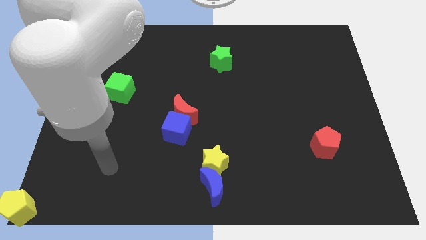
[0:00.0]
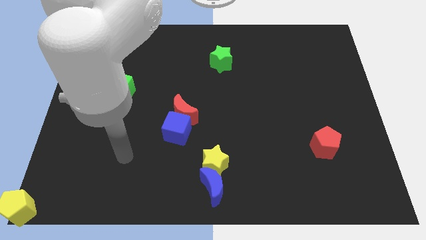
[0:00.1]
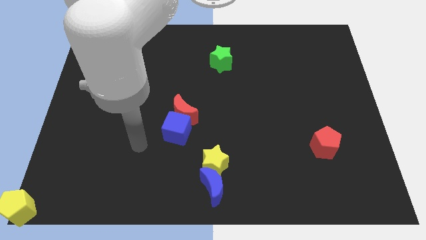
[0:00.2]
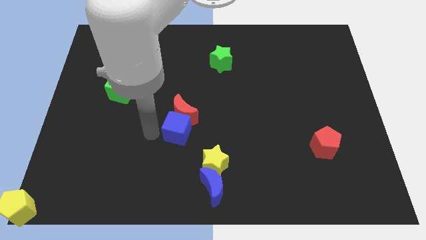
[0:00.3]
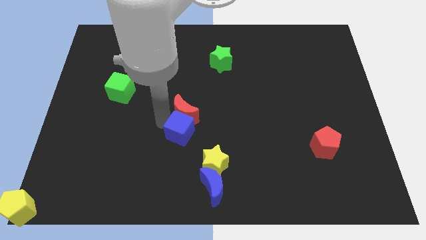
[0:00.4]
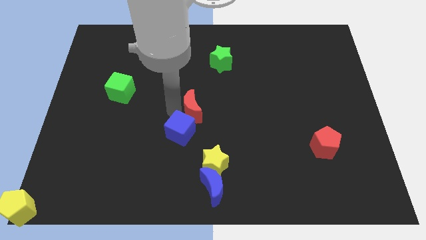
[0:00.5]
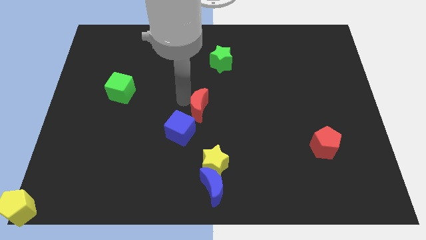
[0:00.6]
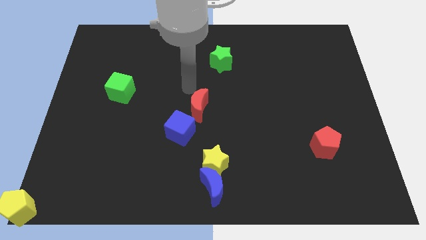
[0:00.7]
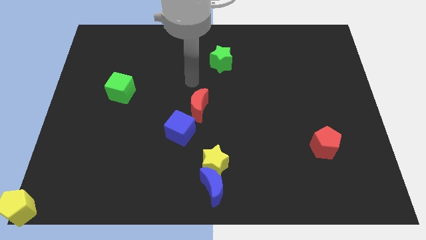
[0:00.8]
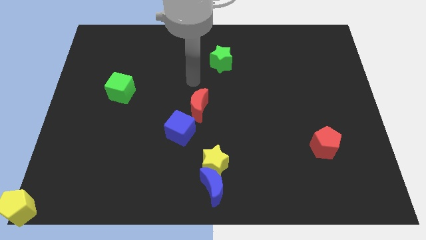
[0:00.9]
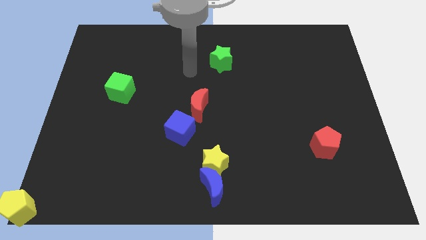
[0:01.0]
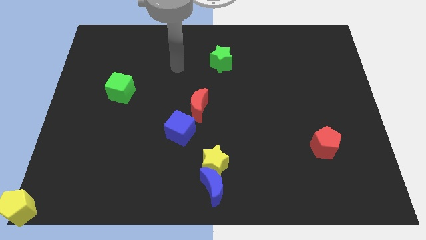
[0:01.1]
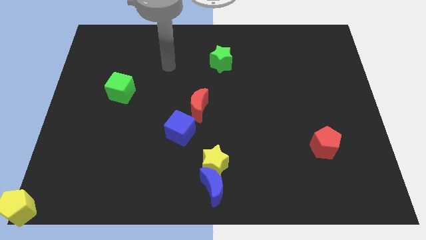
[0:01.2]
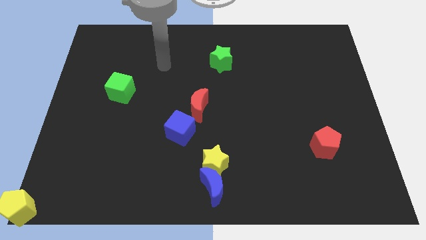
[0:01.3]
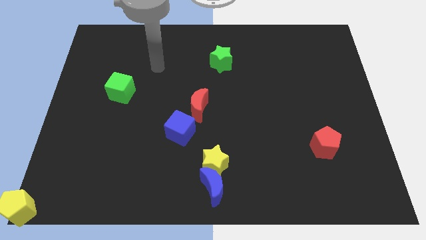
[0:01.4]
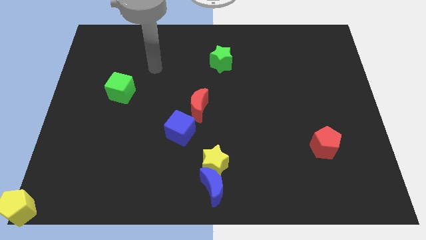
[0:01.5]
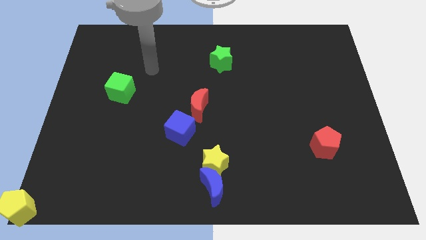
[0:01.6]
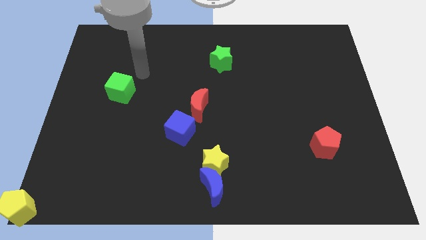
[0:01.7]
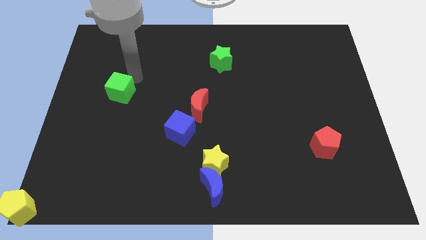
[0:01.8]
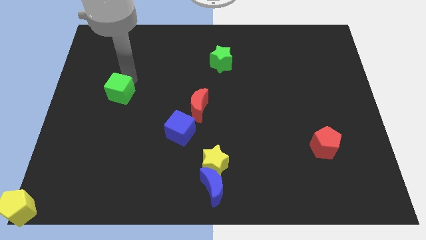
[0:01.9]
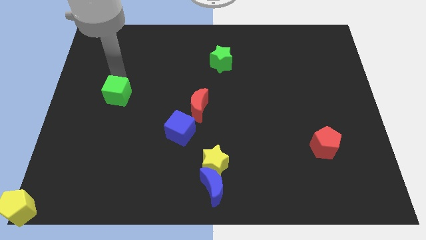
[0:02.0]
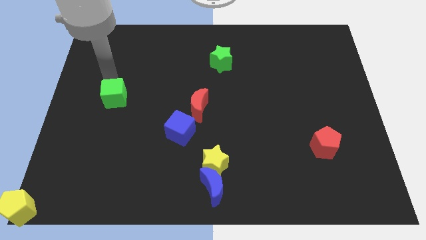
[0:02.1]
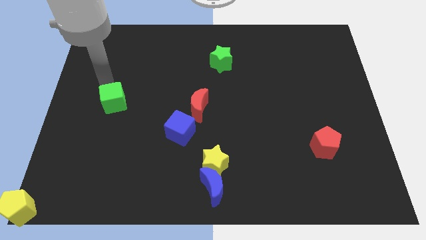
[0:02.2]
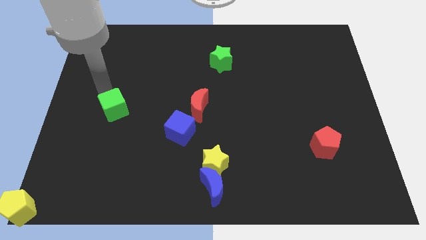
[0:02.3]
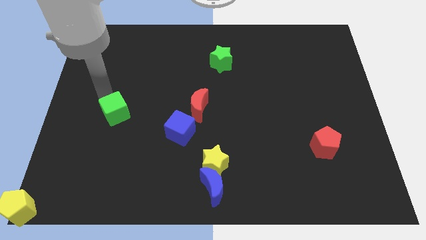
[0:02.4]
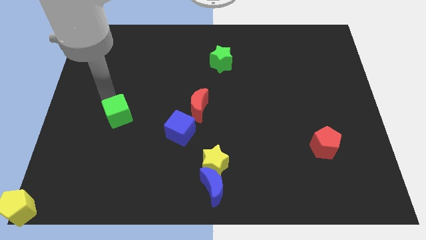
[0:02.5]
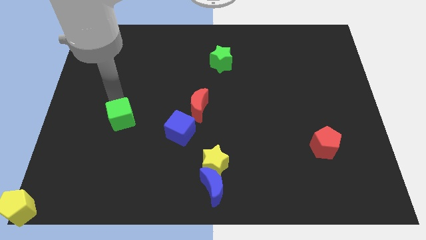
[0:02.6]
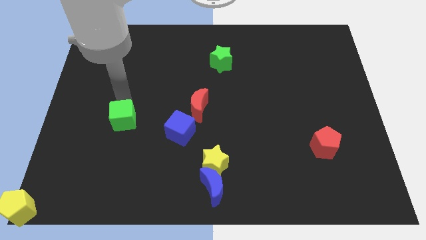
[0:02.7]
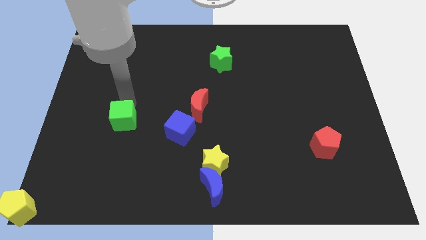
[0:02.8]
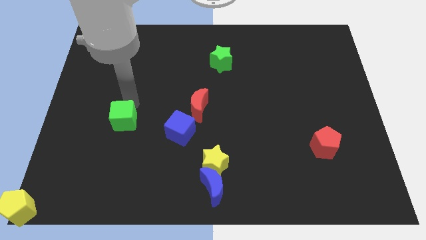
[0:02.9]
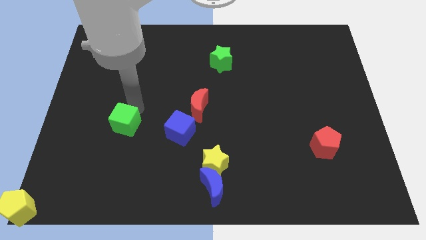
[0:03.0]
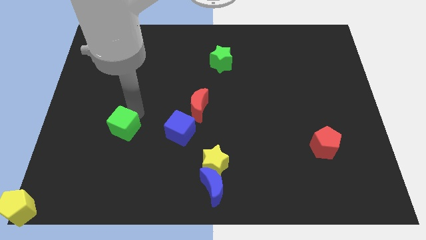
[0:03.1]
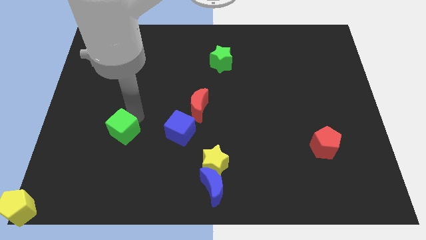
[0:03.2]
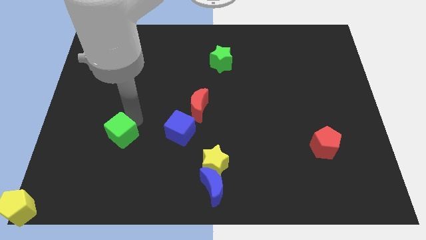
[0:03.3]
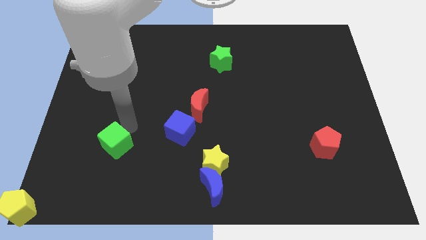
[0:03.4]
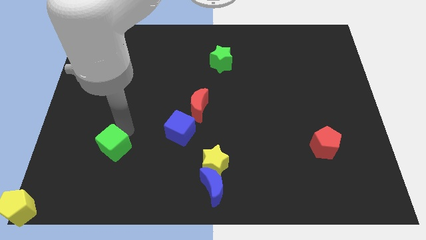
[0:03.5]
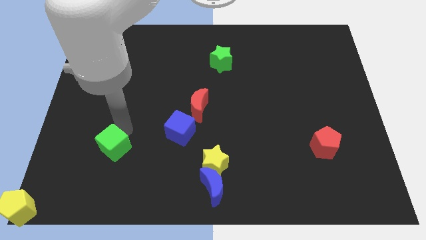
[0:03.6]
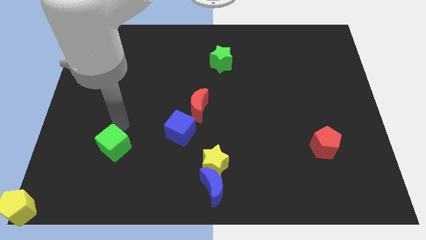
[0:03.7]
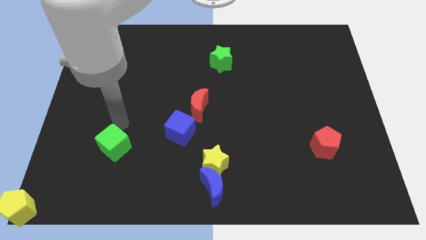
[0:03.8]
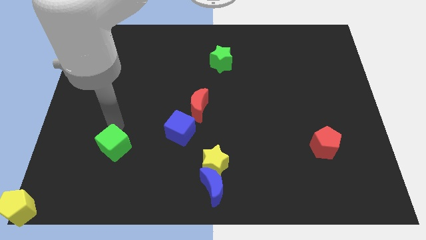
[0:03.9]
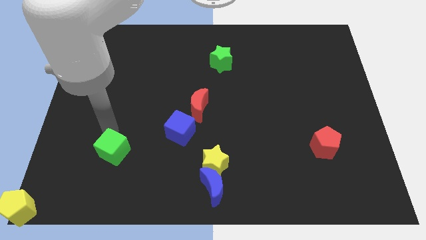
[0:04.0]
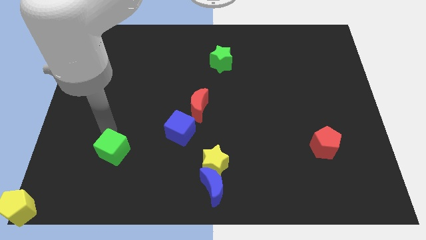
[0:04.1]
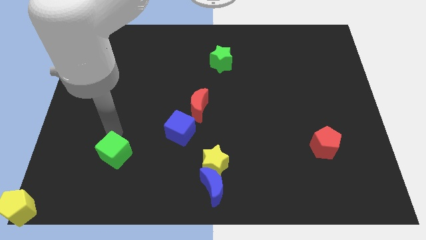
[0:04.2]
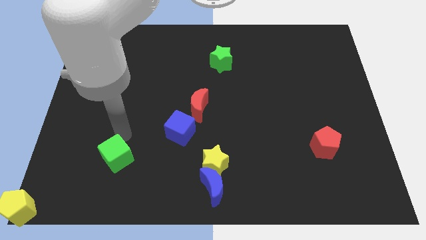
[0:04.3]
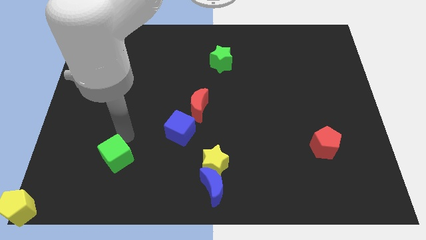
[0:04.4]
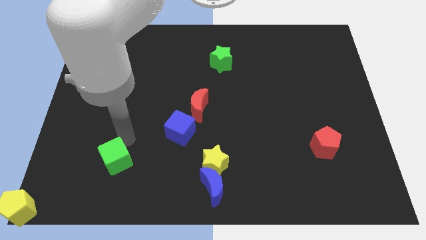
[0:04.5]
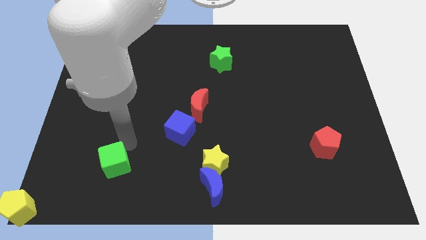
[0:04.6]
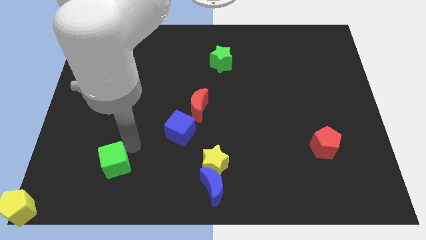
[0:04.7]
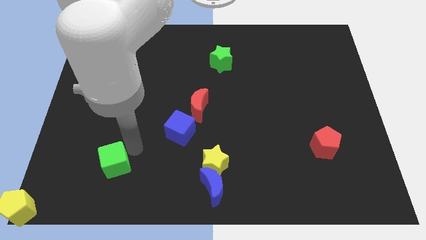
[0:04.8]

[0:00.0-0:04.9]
put the green cube to the left of the yellow star

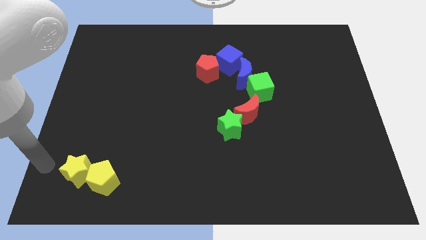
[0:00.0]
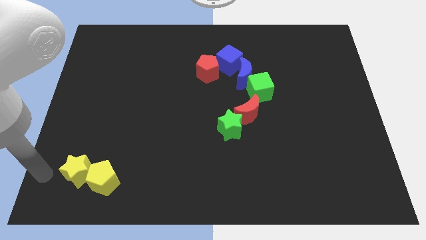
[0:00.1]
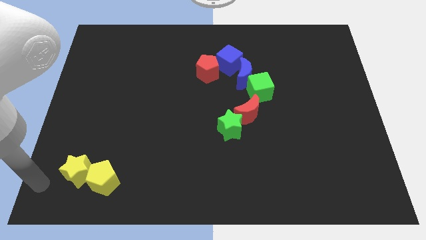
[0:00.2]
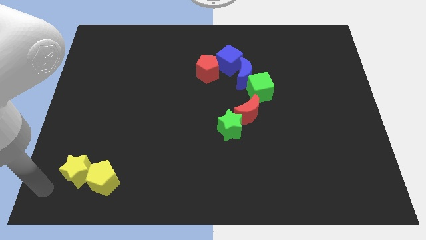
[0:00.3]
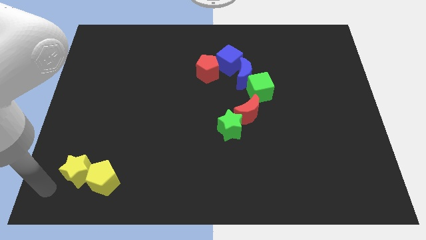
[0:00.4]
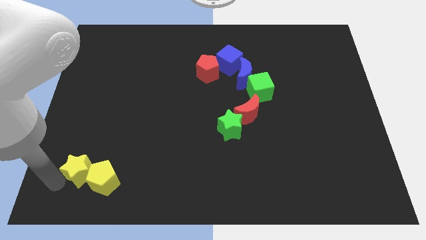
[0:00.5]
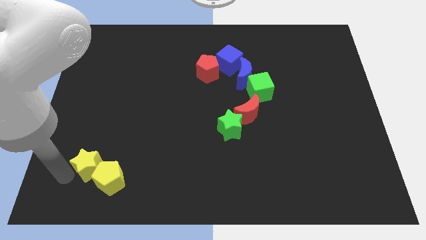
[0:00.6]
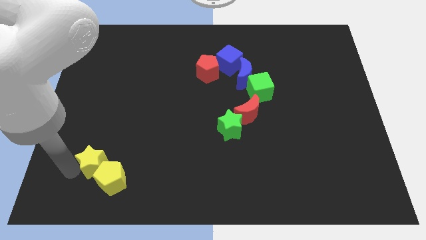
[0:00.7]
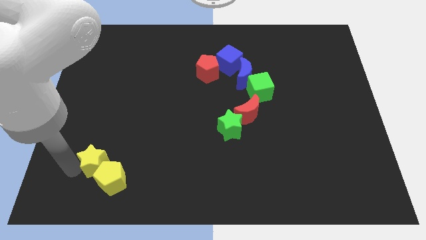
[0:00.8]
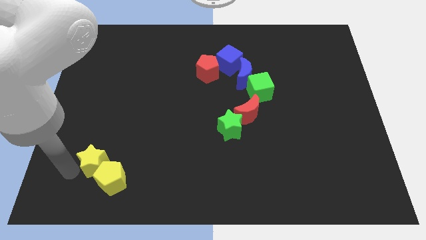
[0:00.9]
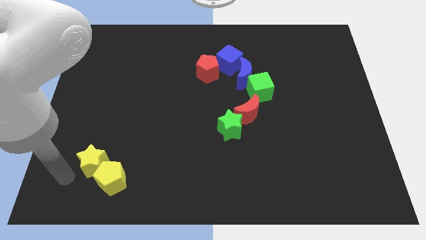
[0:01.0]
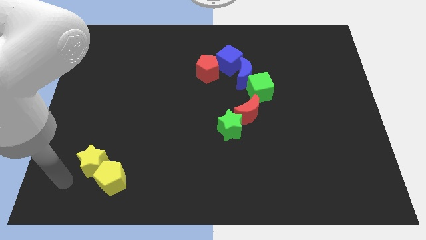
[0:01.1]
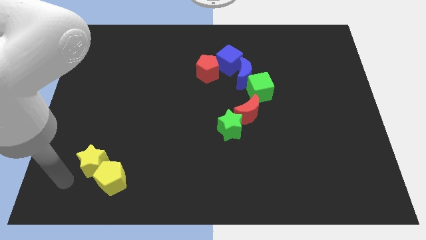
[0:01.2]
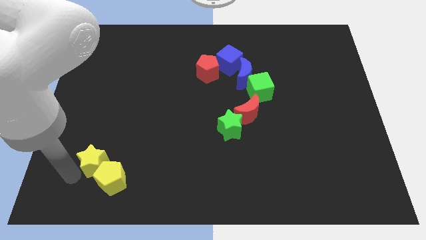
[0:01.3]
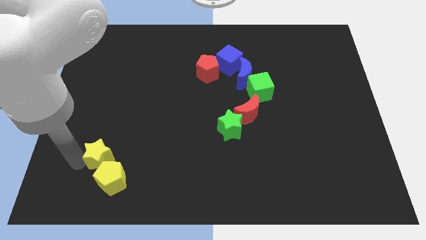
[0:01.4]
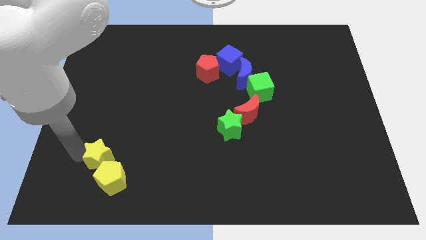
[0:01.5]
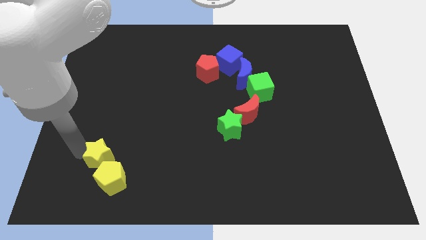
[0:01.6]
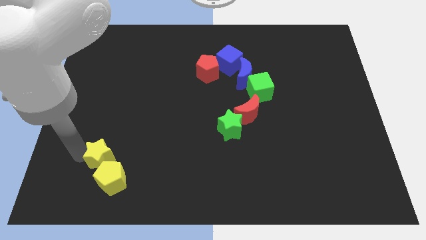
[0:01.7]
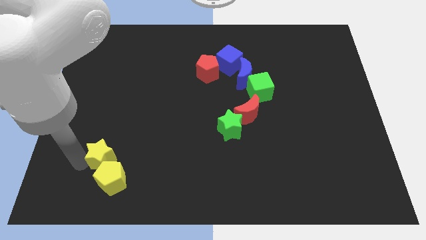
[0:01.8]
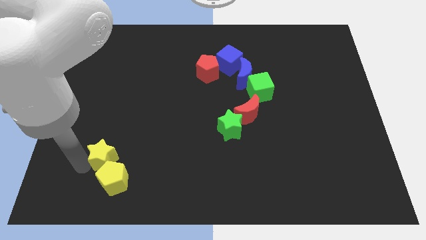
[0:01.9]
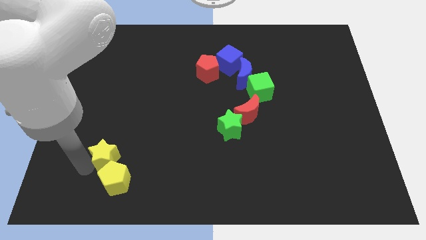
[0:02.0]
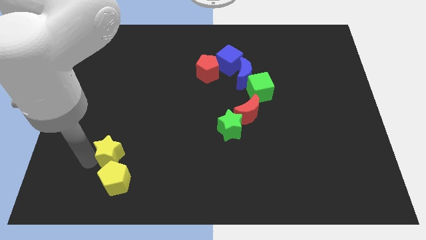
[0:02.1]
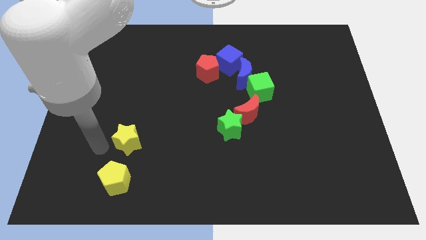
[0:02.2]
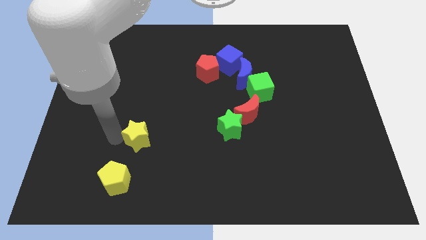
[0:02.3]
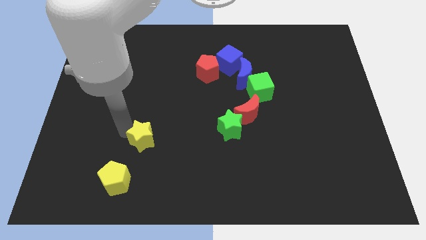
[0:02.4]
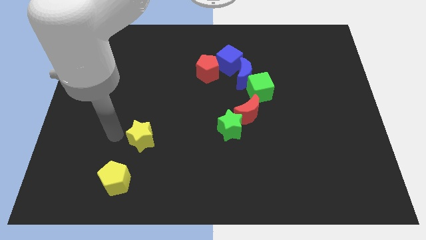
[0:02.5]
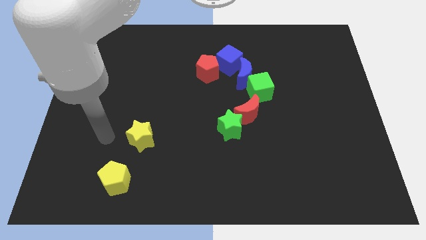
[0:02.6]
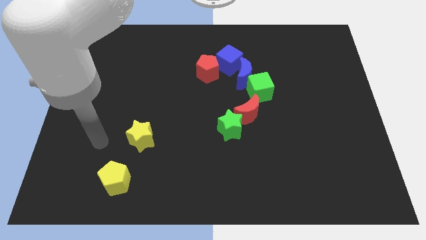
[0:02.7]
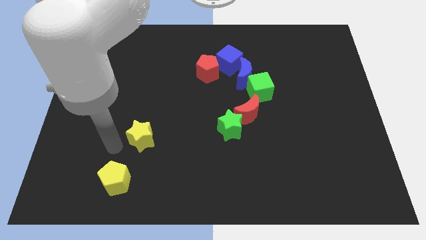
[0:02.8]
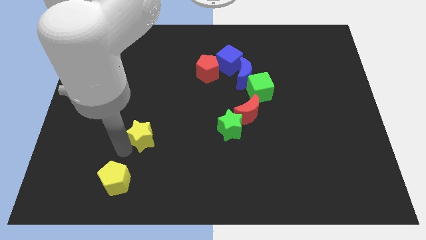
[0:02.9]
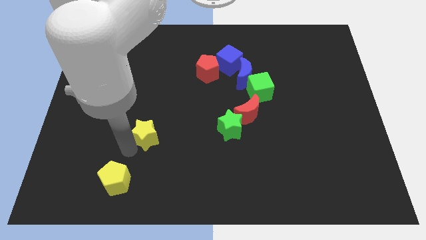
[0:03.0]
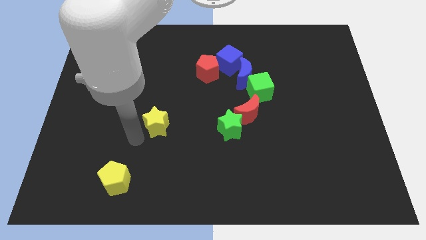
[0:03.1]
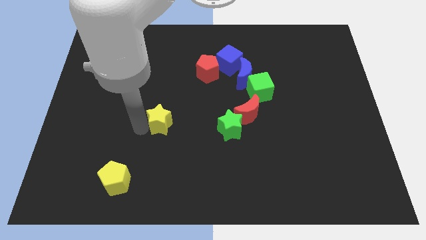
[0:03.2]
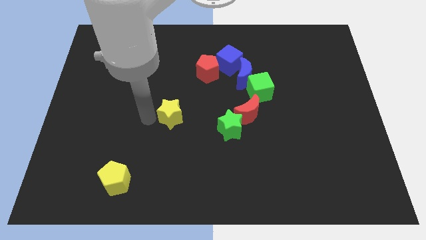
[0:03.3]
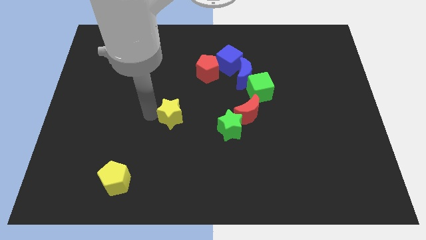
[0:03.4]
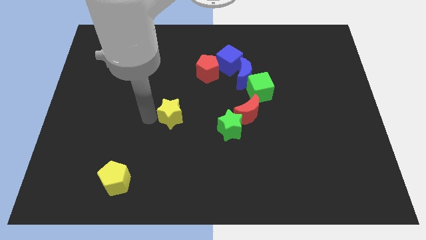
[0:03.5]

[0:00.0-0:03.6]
push yellow star diagonally below red pentagon

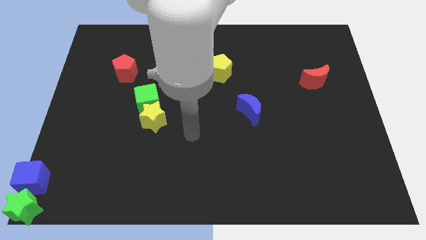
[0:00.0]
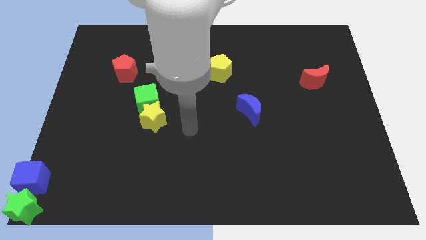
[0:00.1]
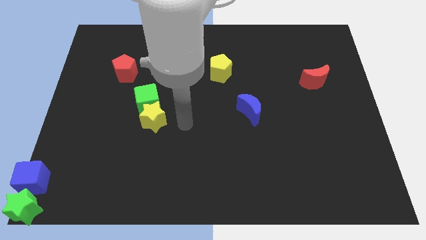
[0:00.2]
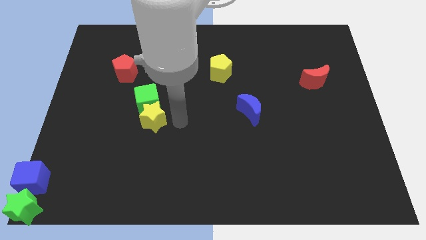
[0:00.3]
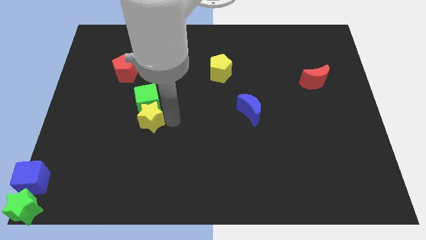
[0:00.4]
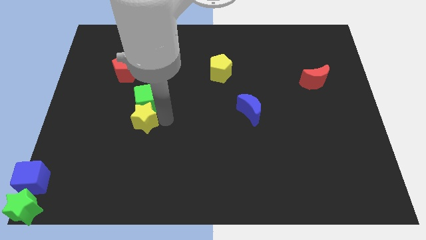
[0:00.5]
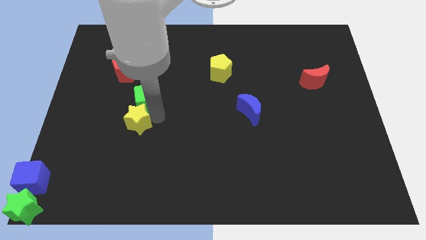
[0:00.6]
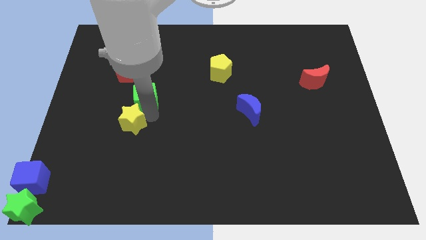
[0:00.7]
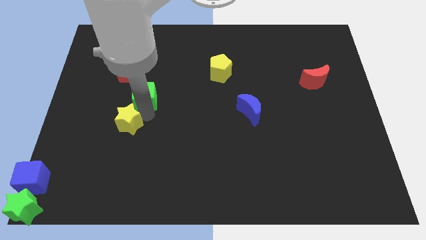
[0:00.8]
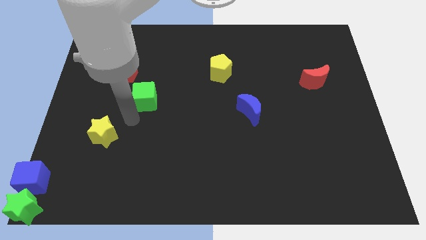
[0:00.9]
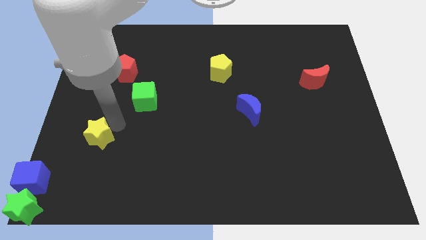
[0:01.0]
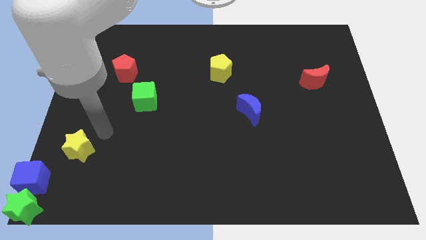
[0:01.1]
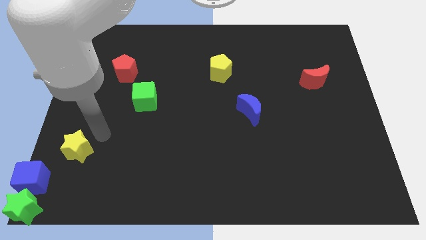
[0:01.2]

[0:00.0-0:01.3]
separate yellow star from green cube
